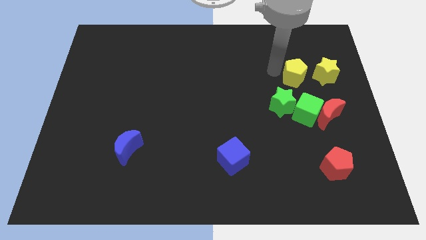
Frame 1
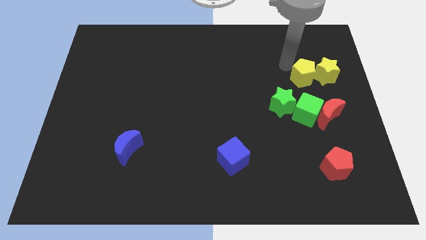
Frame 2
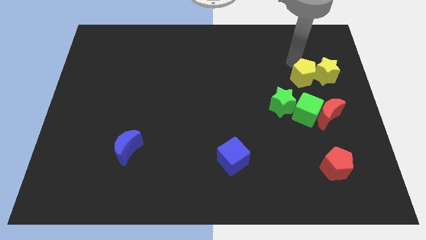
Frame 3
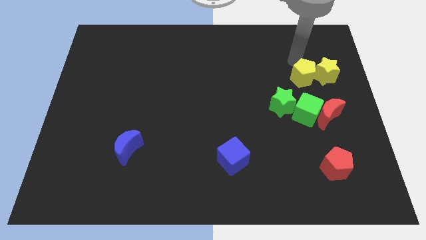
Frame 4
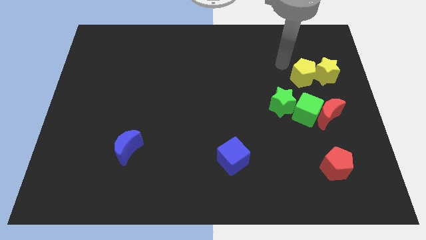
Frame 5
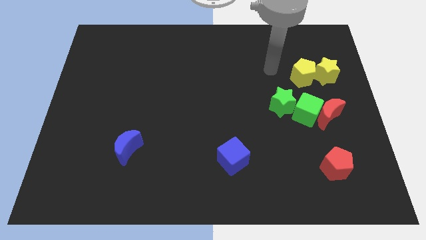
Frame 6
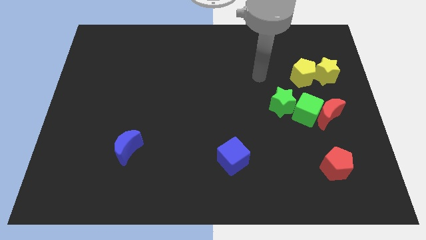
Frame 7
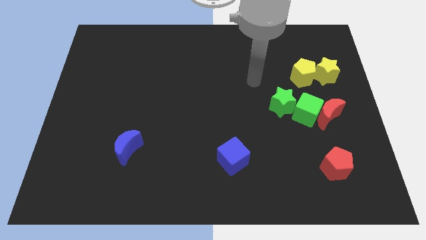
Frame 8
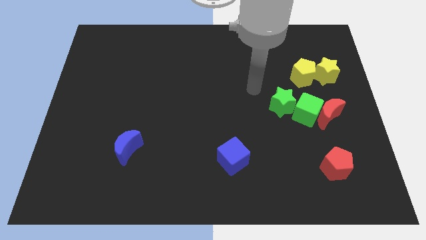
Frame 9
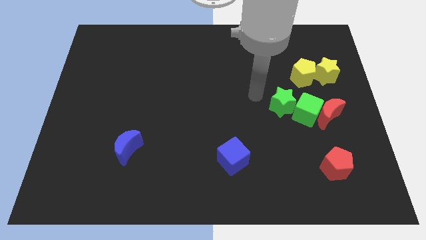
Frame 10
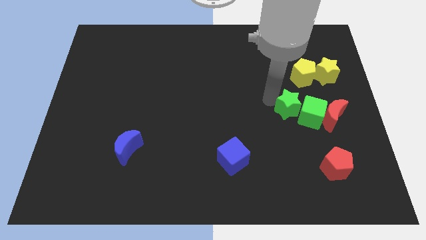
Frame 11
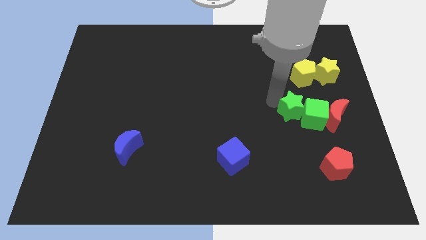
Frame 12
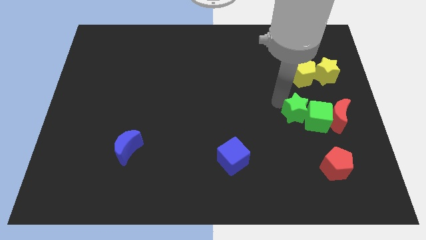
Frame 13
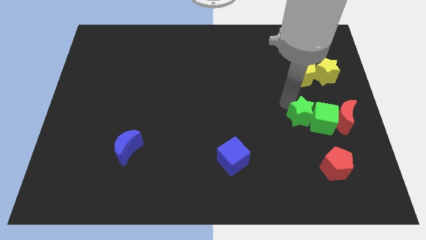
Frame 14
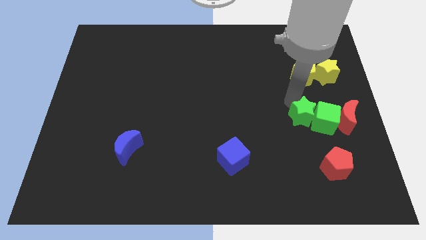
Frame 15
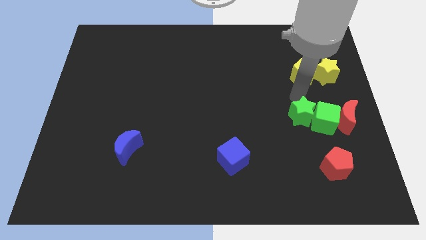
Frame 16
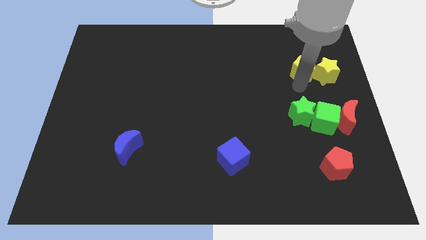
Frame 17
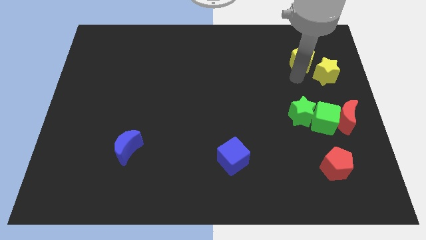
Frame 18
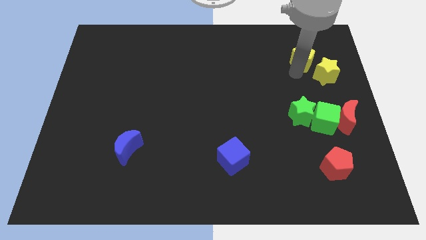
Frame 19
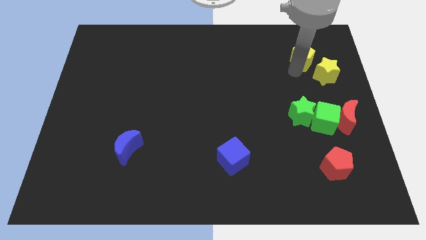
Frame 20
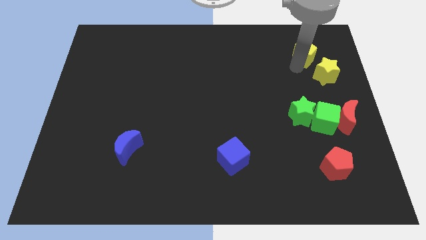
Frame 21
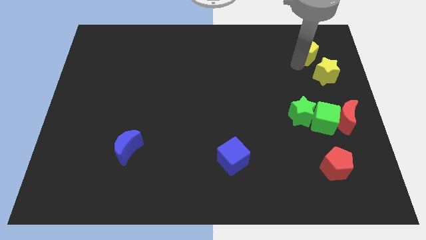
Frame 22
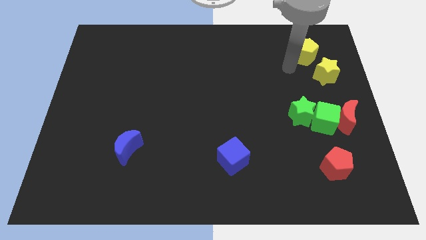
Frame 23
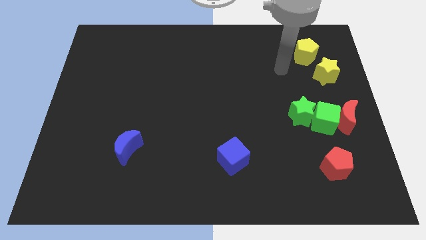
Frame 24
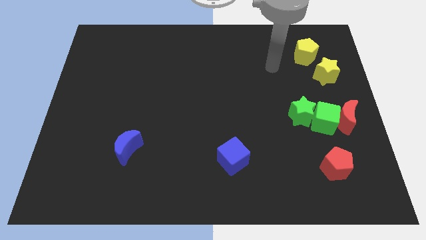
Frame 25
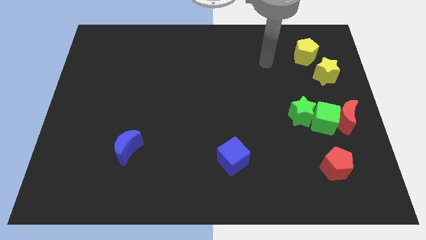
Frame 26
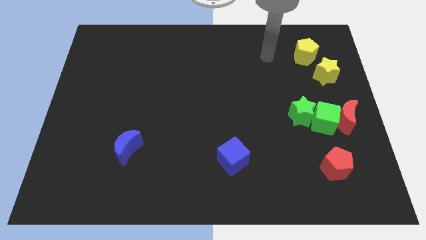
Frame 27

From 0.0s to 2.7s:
push yellow pentagon slightly towards up

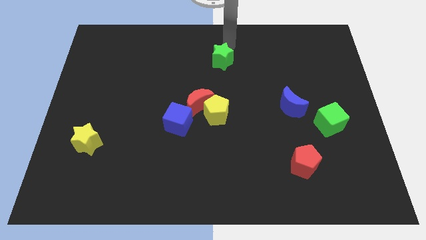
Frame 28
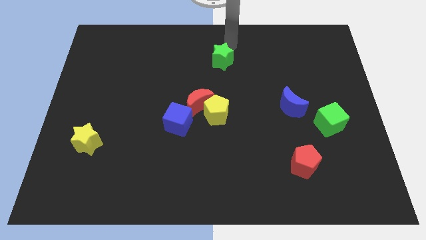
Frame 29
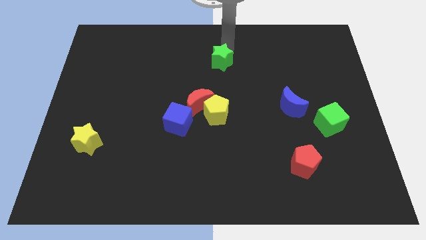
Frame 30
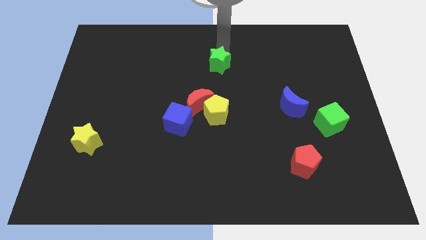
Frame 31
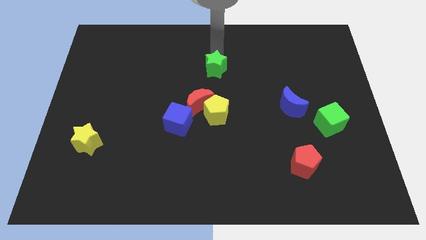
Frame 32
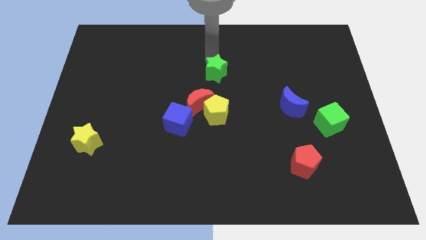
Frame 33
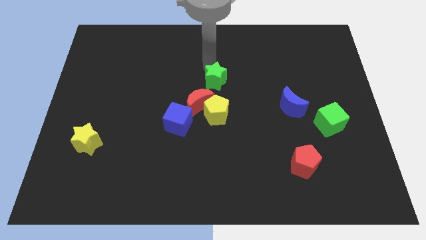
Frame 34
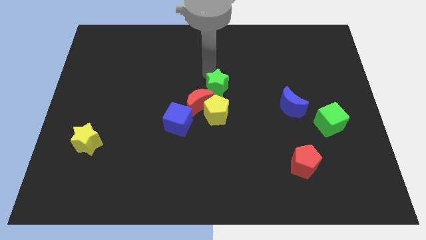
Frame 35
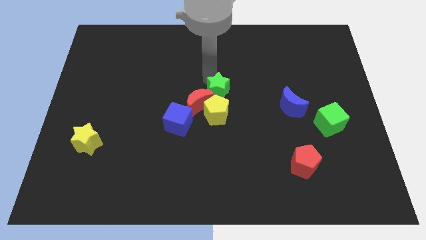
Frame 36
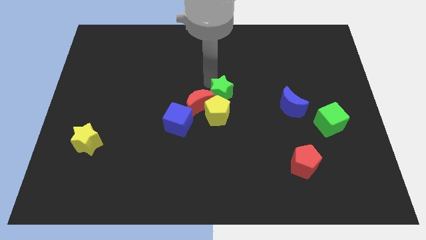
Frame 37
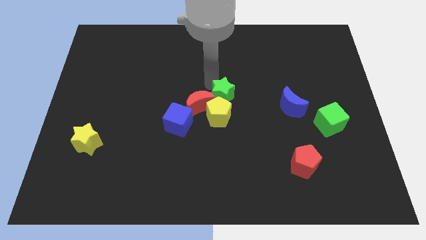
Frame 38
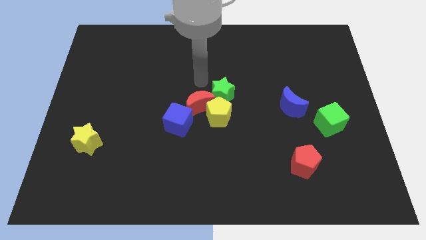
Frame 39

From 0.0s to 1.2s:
place the green star above the yellow pentagon

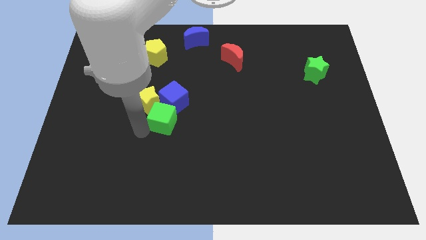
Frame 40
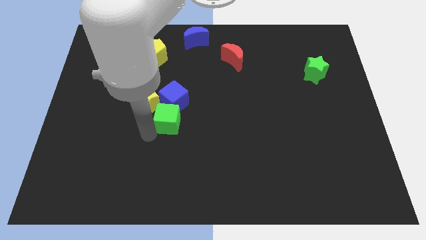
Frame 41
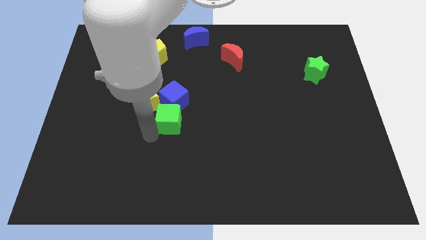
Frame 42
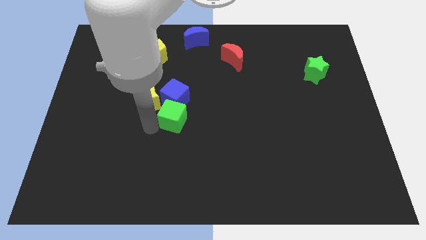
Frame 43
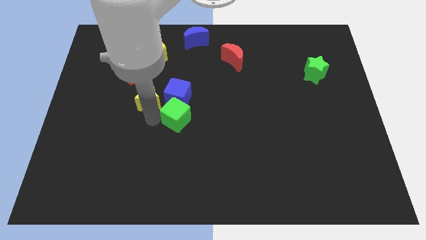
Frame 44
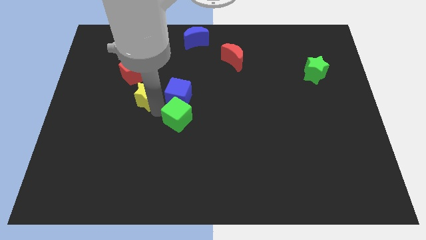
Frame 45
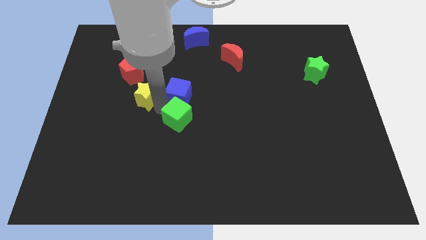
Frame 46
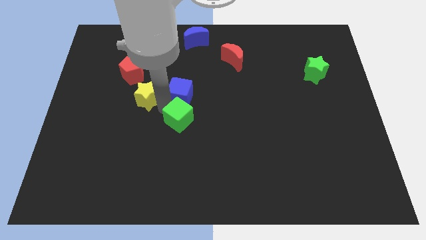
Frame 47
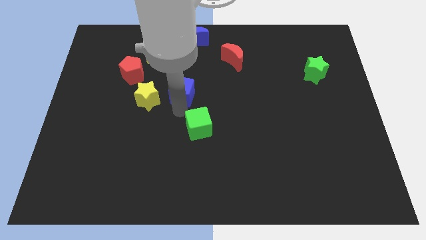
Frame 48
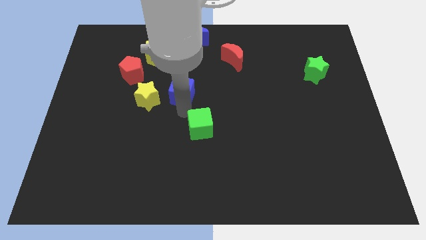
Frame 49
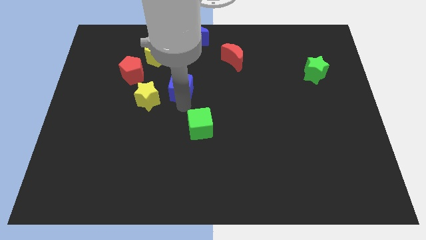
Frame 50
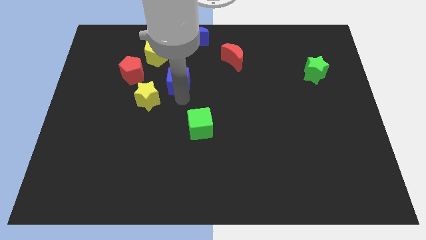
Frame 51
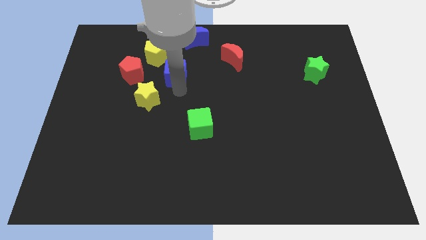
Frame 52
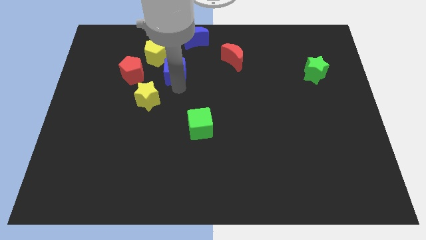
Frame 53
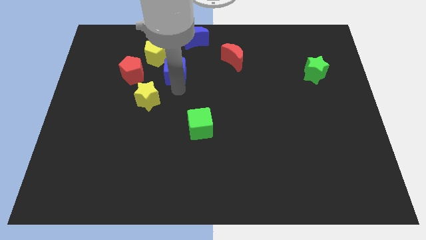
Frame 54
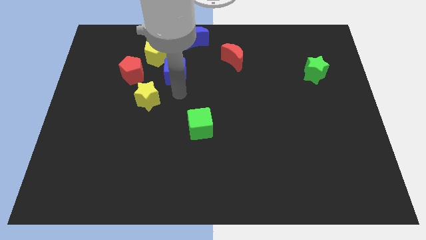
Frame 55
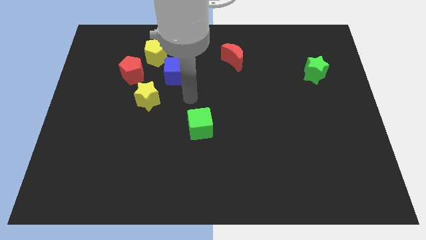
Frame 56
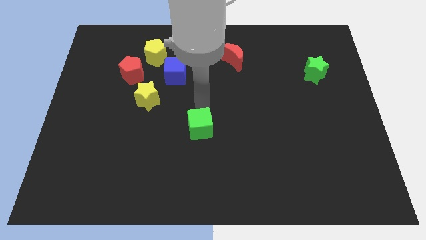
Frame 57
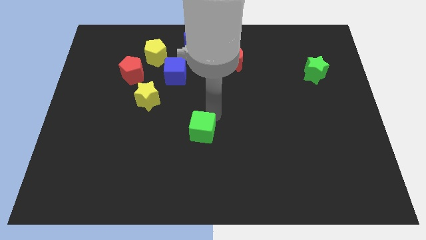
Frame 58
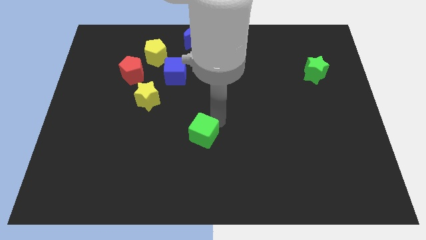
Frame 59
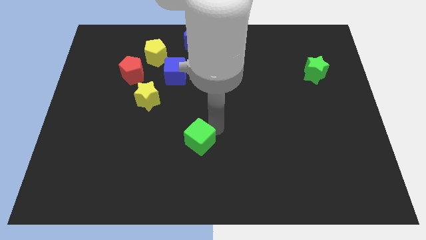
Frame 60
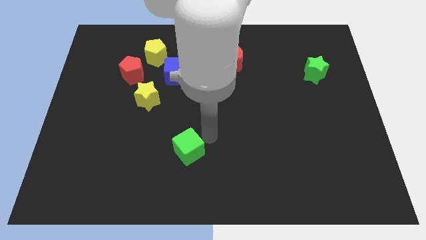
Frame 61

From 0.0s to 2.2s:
separate yellow star and green cube and blue cube

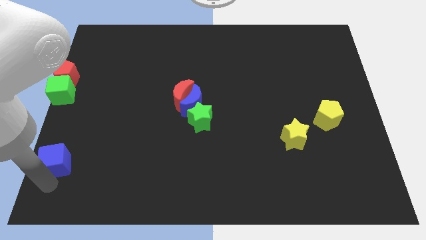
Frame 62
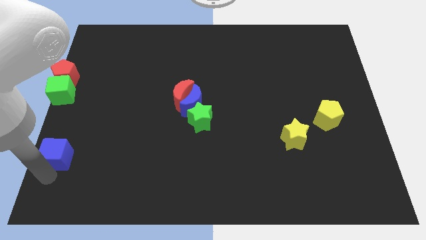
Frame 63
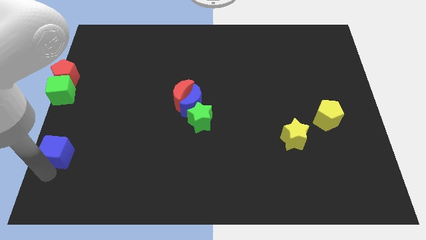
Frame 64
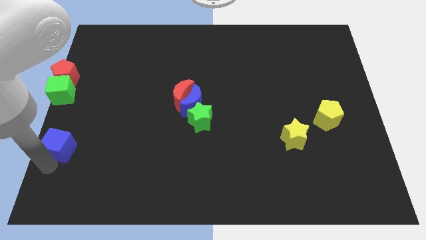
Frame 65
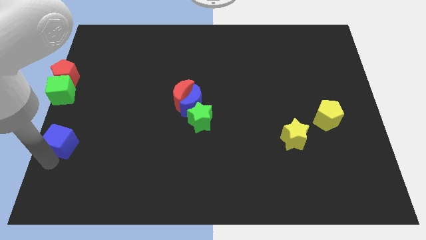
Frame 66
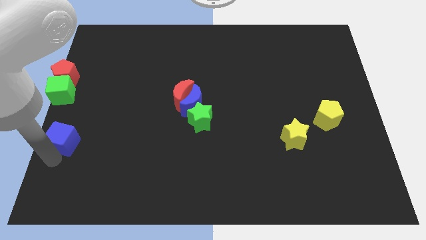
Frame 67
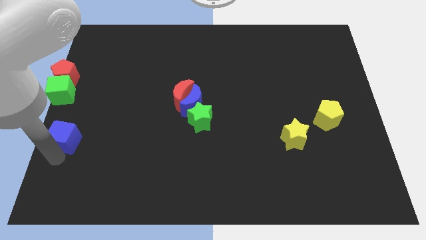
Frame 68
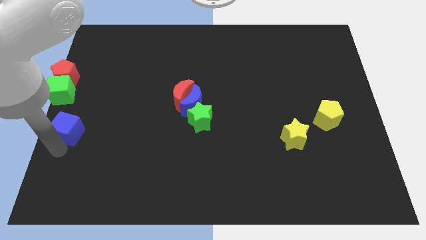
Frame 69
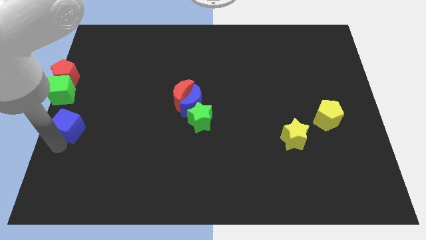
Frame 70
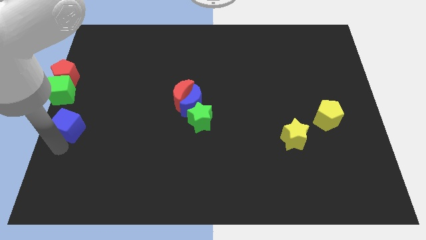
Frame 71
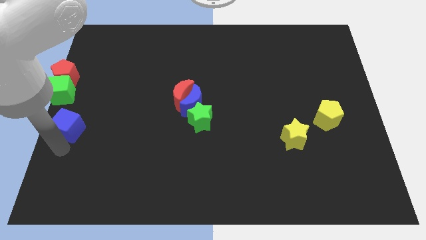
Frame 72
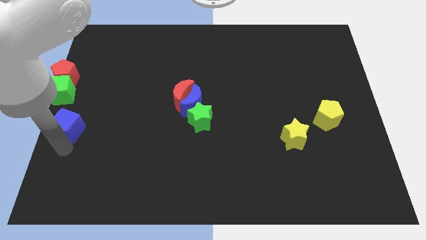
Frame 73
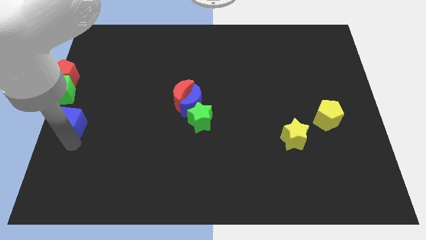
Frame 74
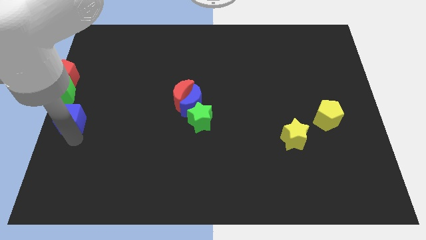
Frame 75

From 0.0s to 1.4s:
move blue cube towards green cube

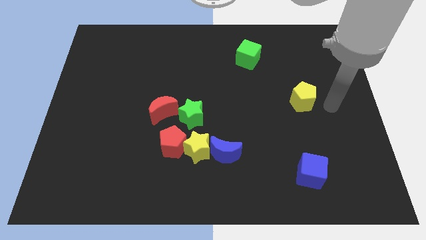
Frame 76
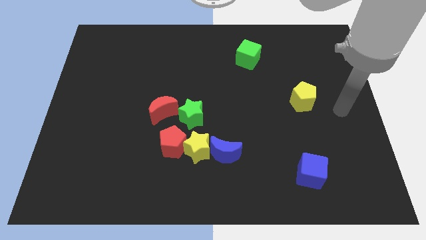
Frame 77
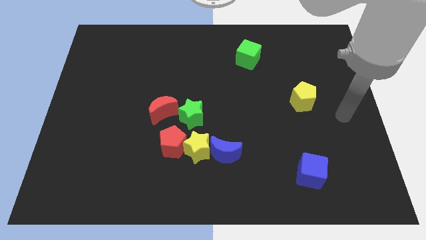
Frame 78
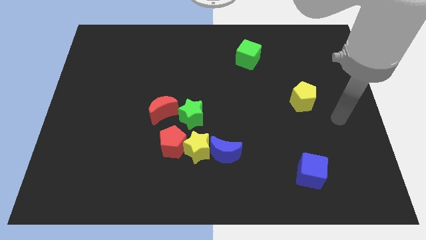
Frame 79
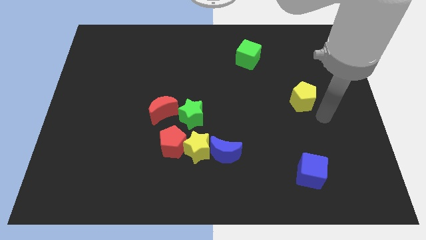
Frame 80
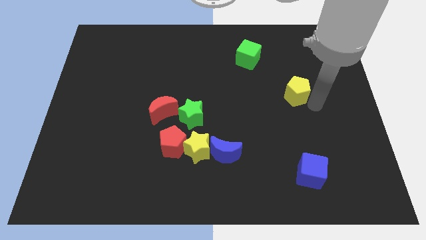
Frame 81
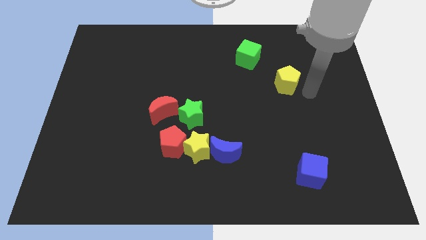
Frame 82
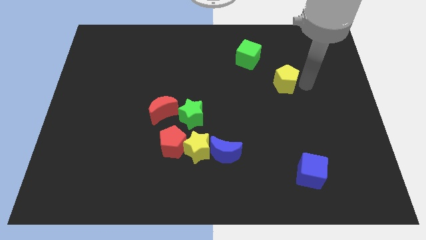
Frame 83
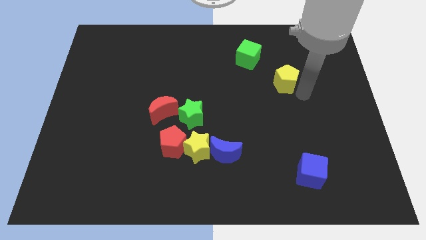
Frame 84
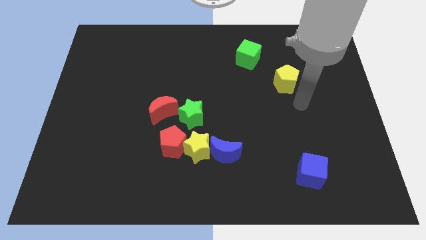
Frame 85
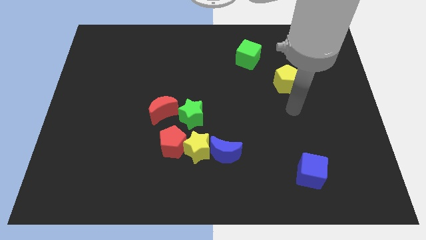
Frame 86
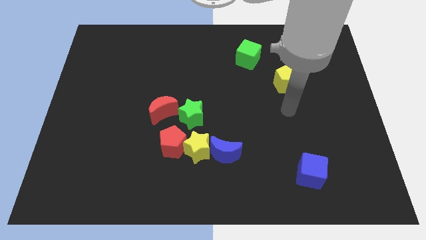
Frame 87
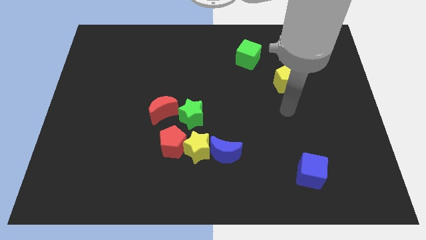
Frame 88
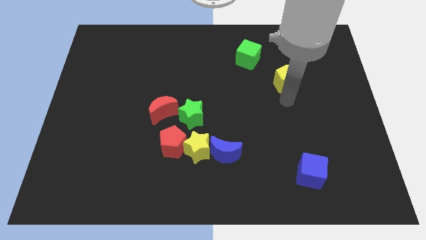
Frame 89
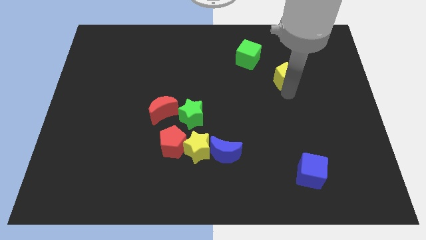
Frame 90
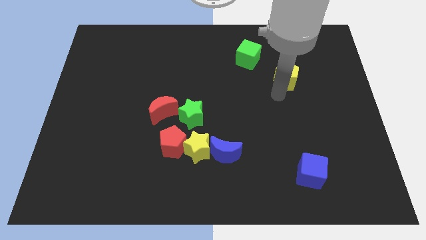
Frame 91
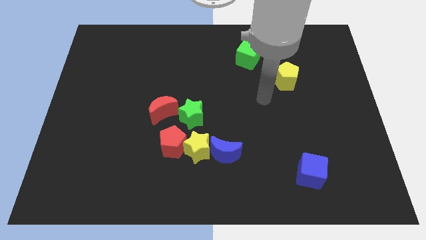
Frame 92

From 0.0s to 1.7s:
push the yellow pentagon towards the green cube
